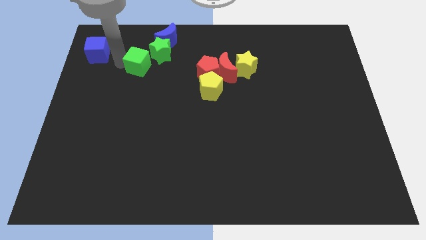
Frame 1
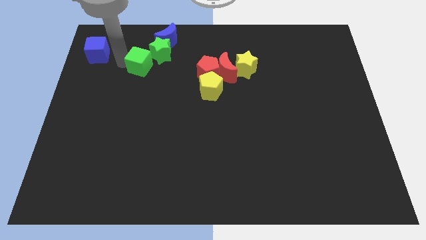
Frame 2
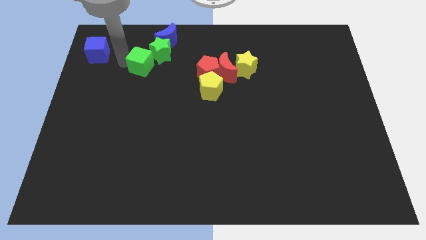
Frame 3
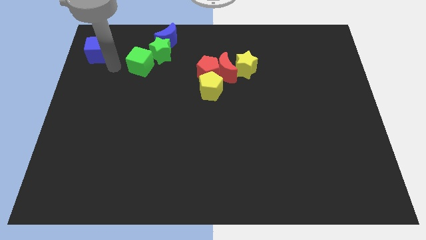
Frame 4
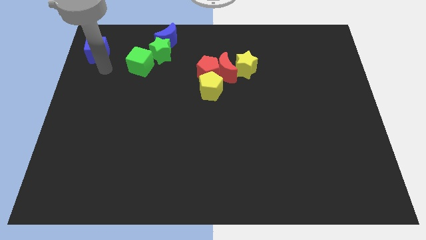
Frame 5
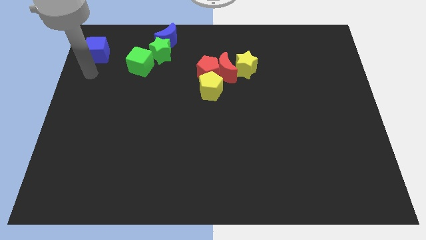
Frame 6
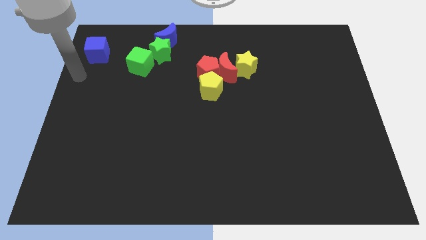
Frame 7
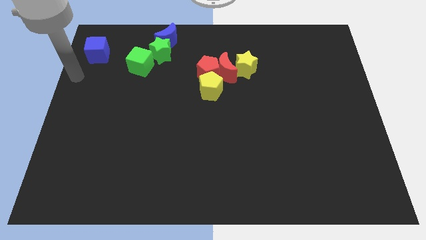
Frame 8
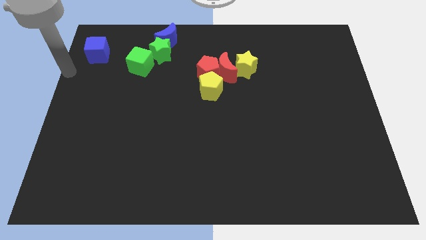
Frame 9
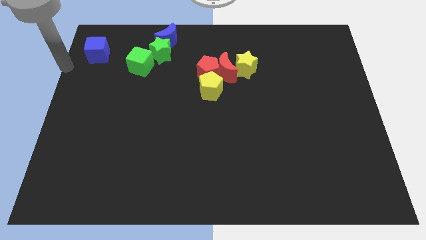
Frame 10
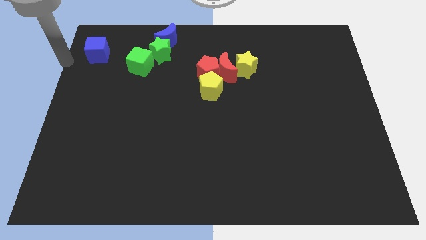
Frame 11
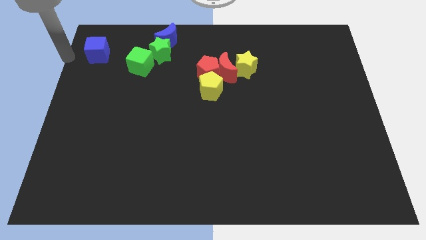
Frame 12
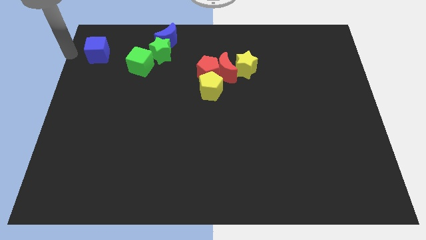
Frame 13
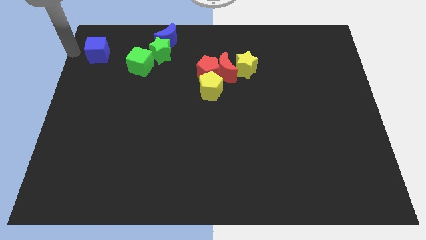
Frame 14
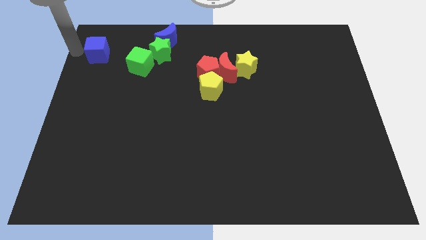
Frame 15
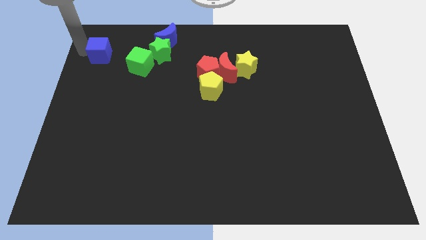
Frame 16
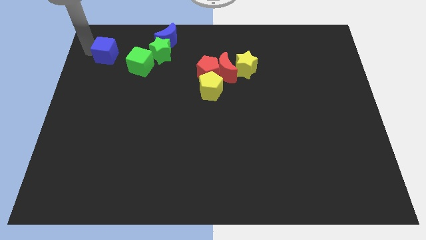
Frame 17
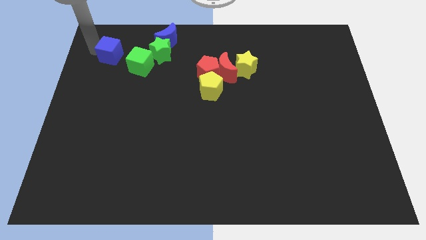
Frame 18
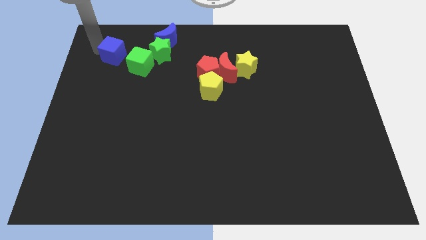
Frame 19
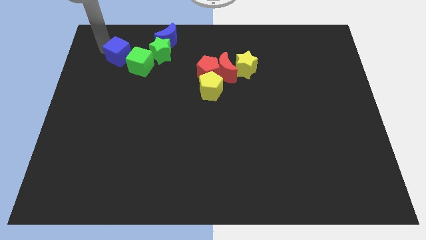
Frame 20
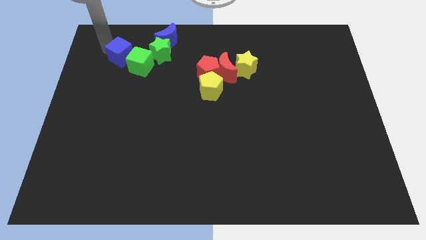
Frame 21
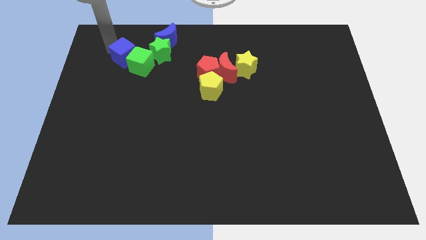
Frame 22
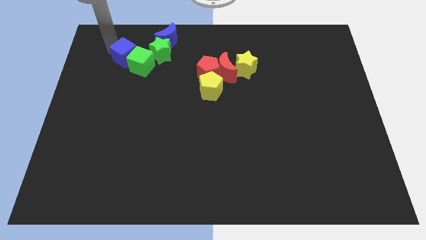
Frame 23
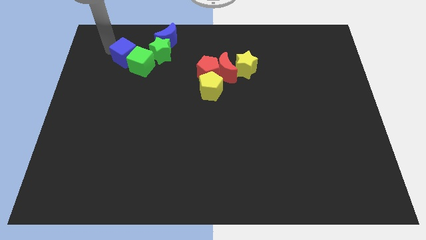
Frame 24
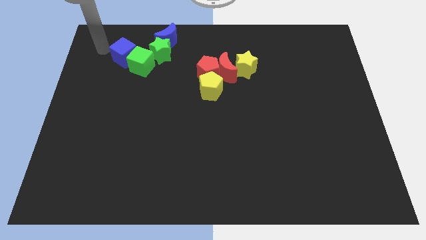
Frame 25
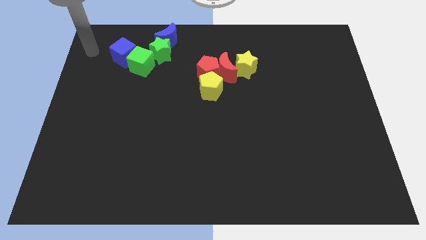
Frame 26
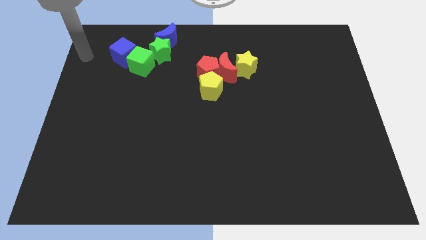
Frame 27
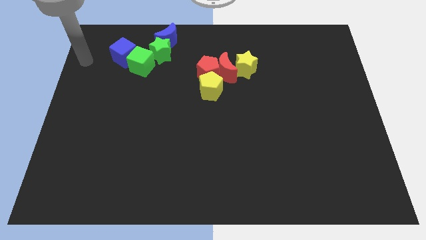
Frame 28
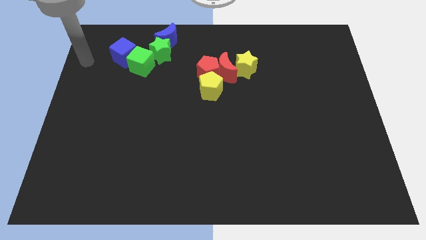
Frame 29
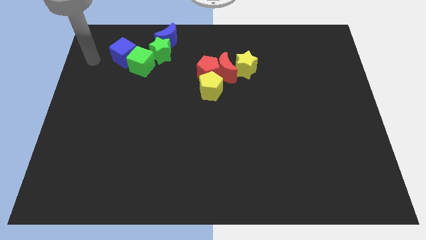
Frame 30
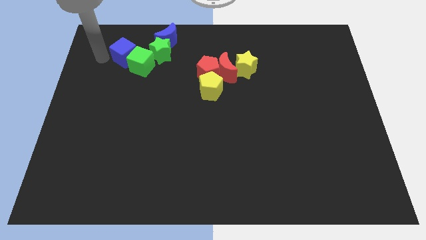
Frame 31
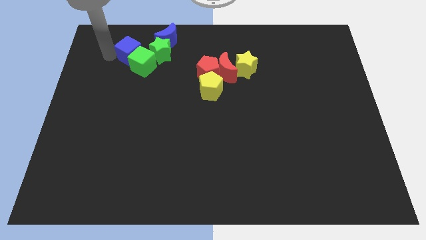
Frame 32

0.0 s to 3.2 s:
slide the blue cube into the green block

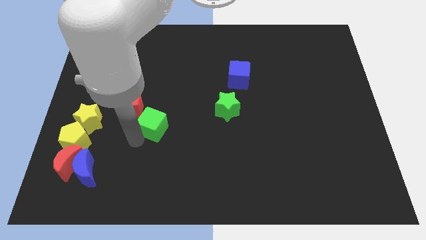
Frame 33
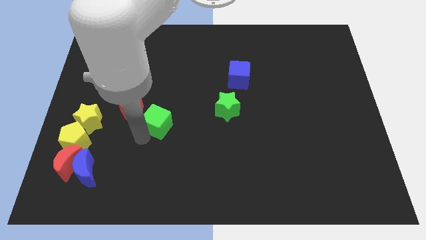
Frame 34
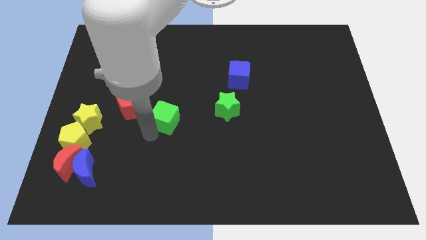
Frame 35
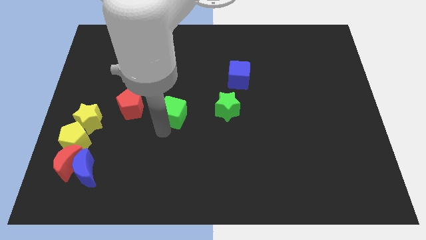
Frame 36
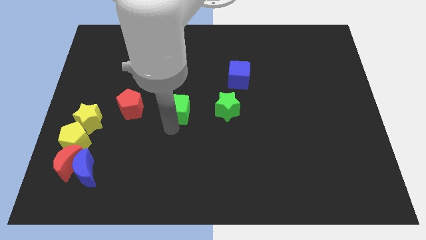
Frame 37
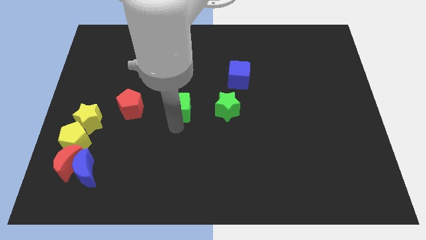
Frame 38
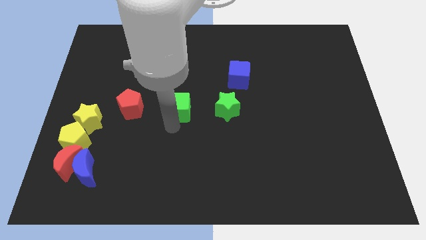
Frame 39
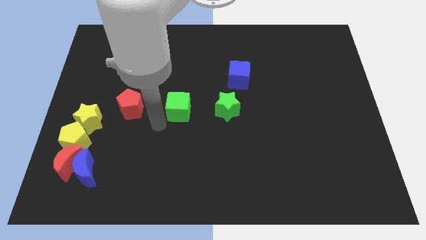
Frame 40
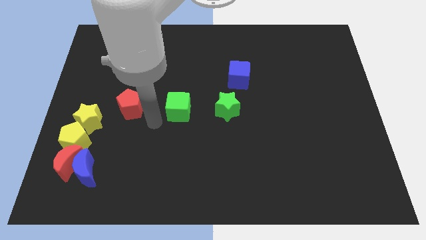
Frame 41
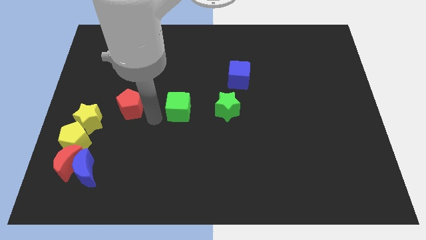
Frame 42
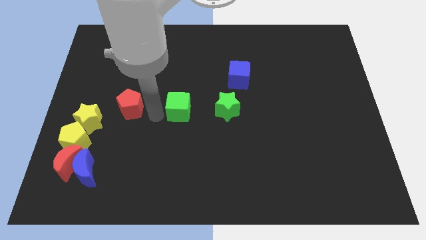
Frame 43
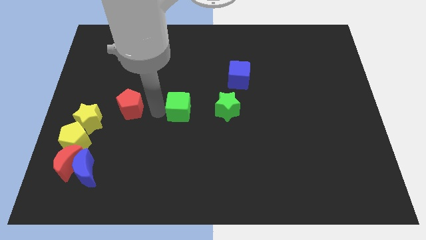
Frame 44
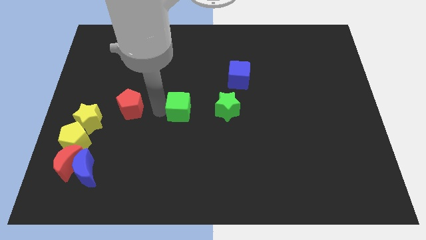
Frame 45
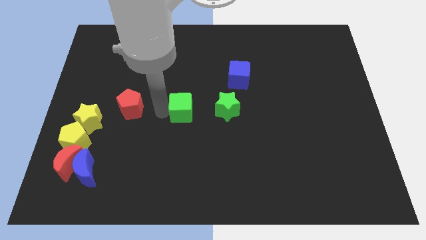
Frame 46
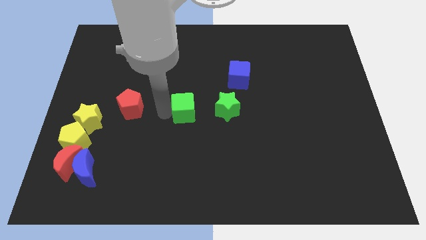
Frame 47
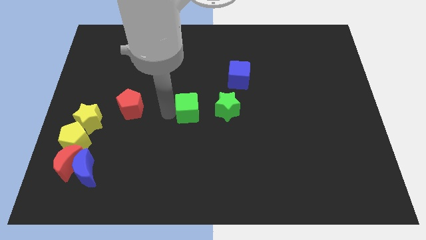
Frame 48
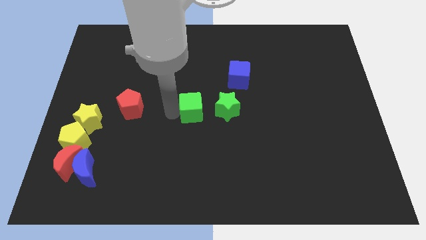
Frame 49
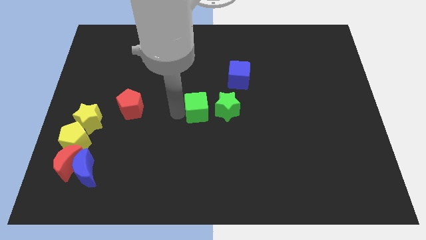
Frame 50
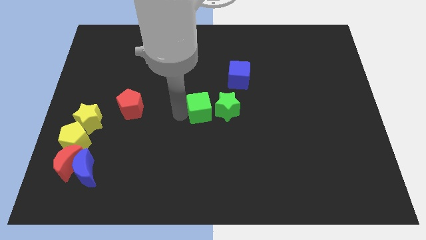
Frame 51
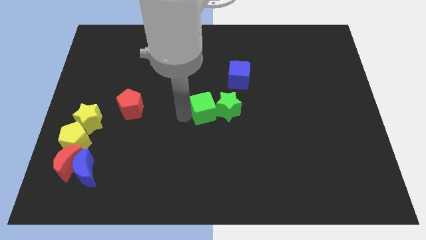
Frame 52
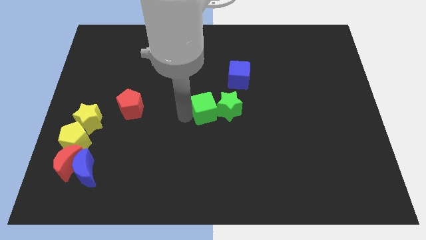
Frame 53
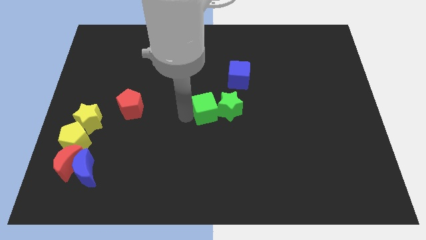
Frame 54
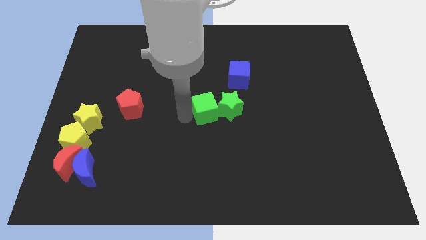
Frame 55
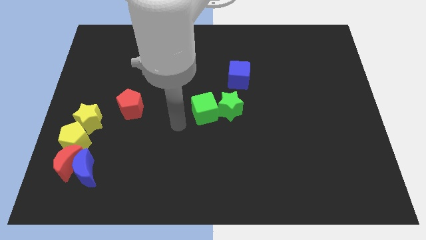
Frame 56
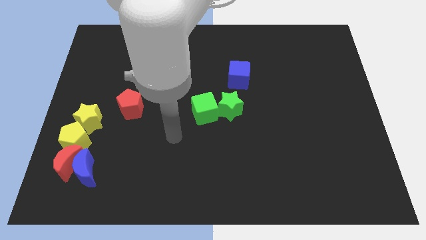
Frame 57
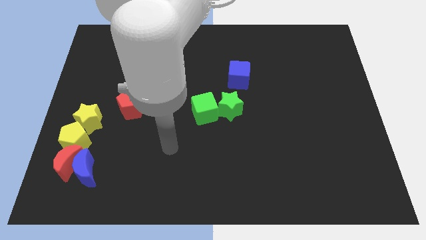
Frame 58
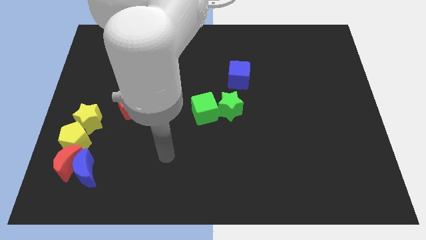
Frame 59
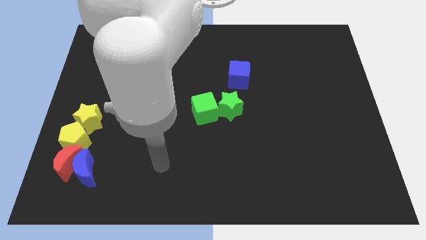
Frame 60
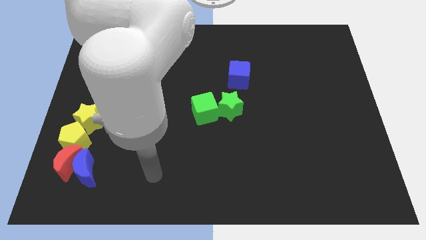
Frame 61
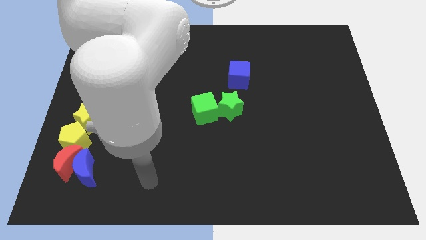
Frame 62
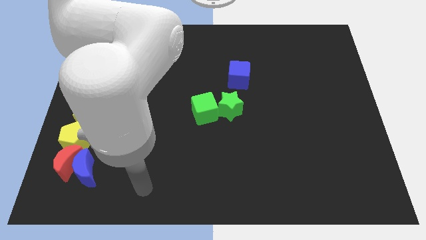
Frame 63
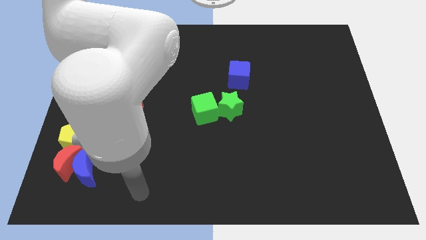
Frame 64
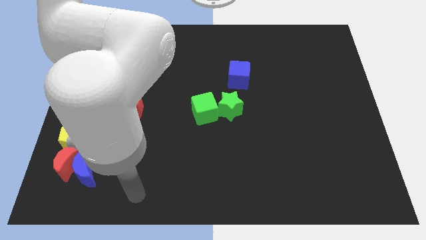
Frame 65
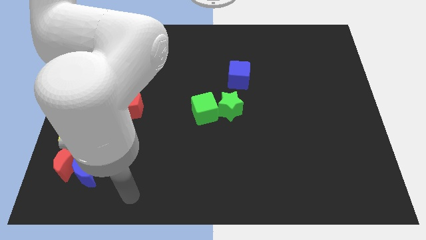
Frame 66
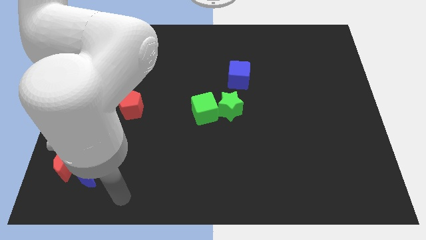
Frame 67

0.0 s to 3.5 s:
push the green cube into the green star slightly

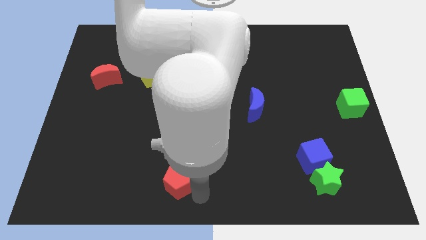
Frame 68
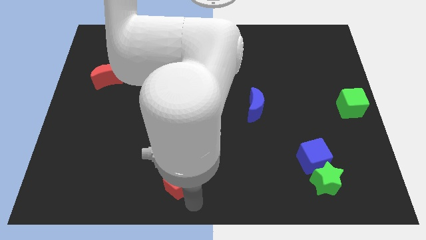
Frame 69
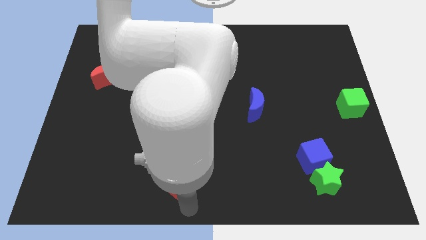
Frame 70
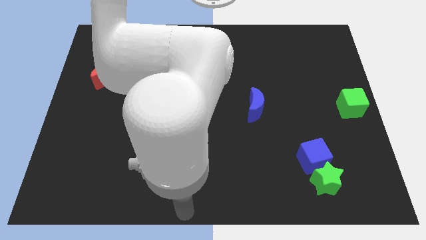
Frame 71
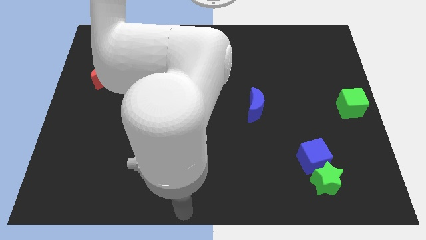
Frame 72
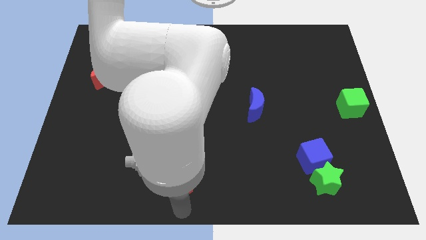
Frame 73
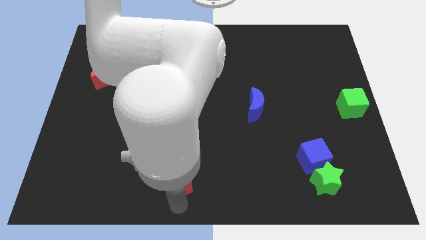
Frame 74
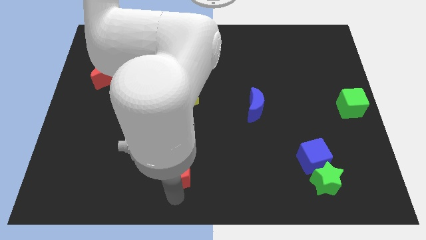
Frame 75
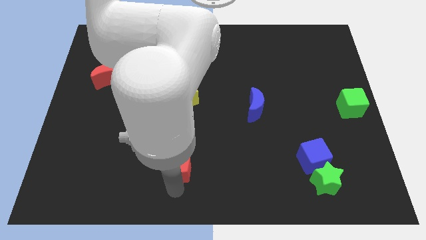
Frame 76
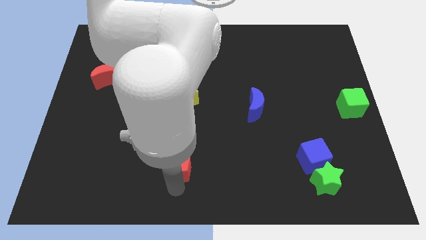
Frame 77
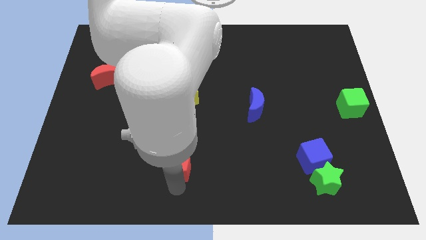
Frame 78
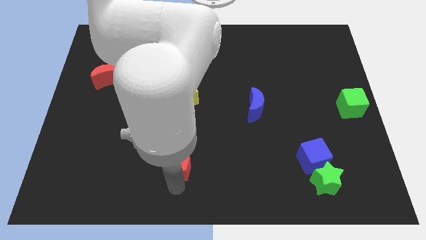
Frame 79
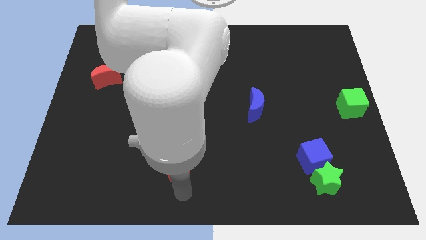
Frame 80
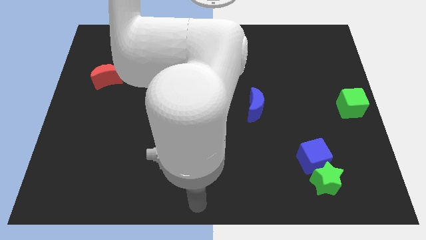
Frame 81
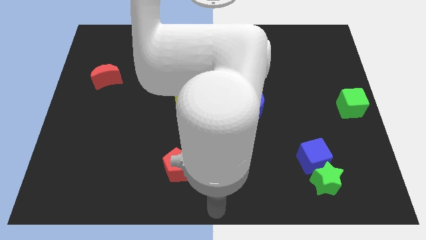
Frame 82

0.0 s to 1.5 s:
slightly push the red pentagon to the bottom side of the yellow star

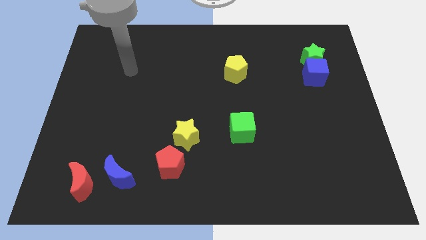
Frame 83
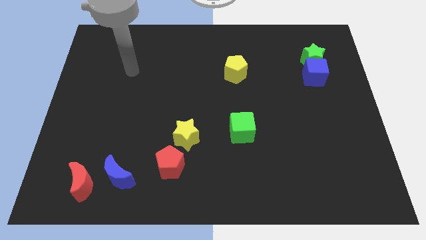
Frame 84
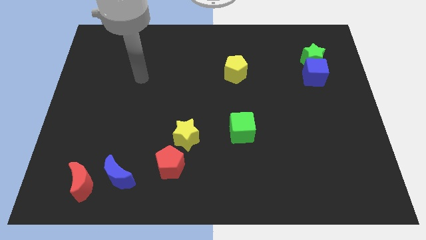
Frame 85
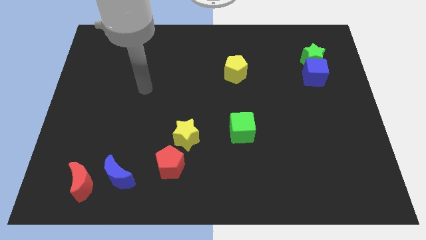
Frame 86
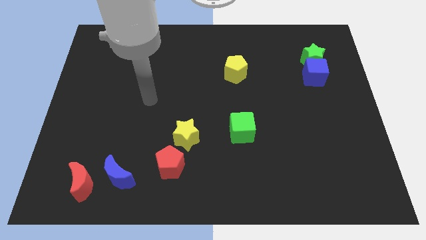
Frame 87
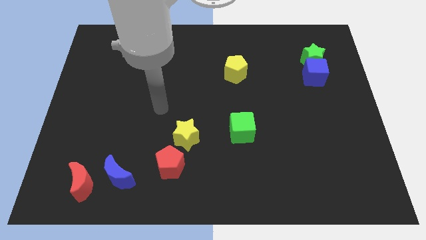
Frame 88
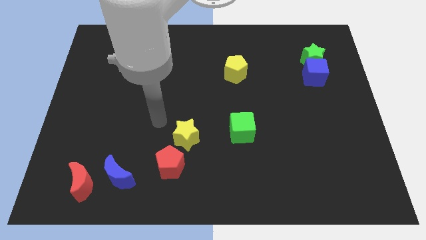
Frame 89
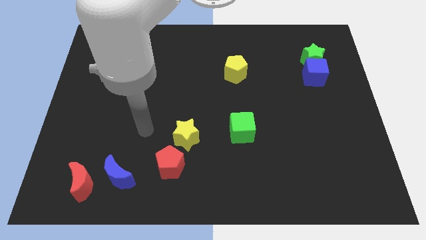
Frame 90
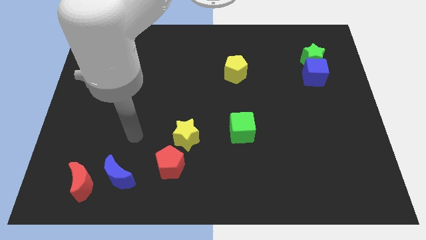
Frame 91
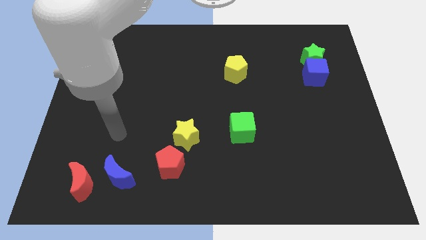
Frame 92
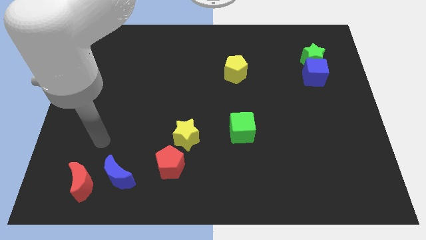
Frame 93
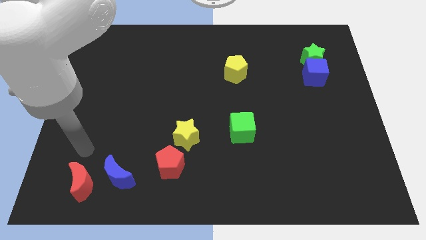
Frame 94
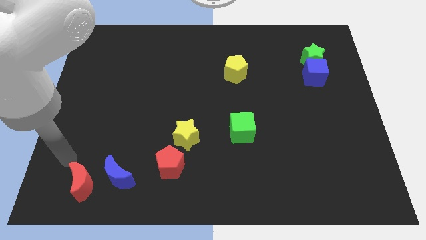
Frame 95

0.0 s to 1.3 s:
place your hand above the red crescent
